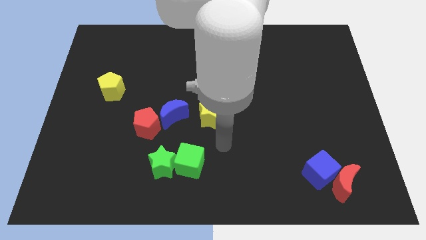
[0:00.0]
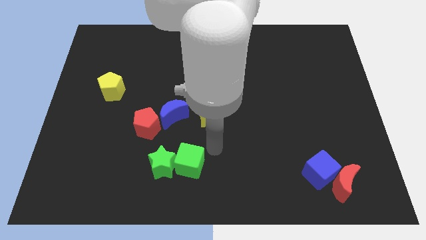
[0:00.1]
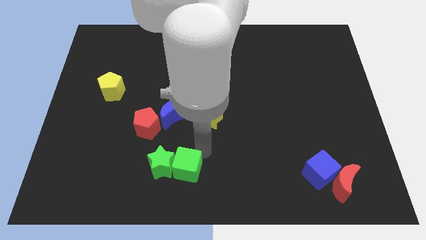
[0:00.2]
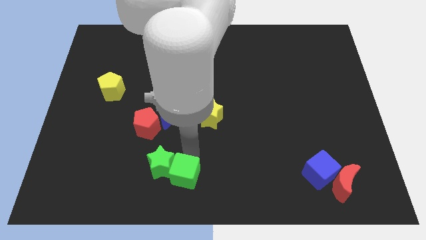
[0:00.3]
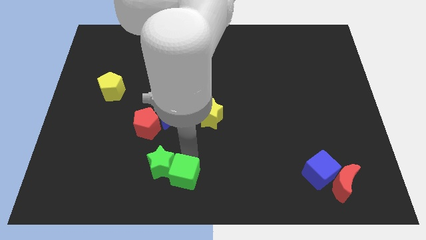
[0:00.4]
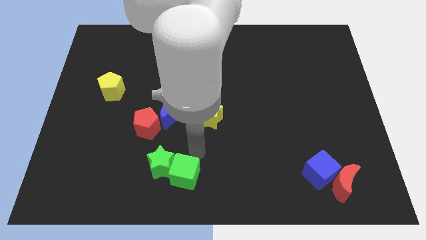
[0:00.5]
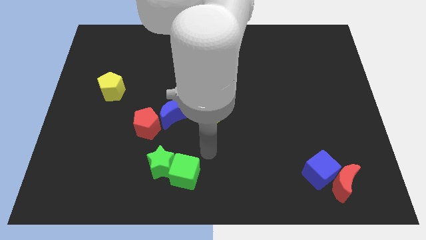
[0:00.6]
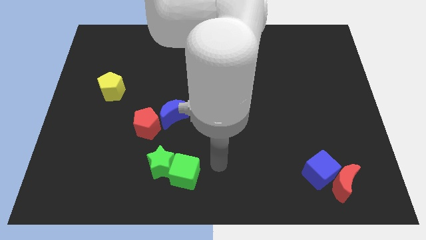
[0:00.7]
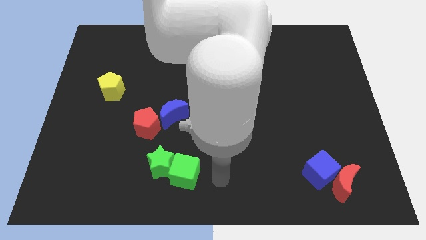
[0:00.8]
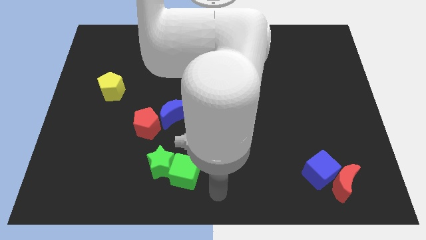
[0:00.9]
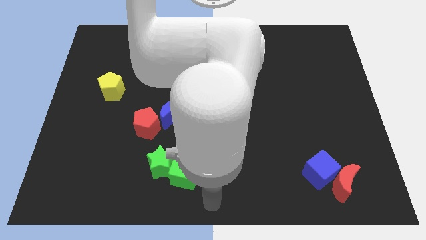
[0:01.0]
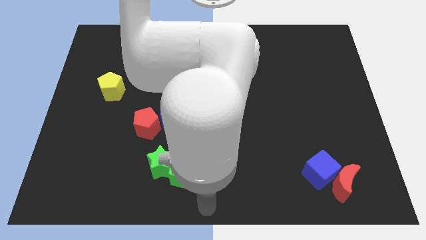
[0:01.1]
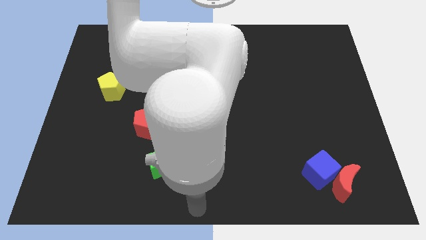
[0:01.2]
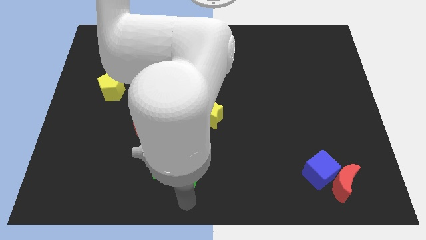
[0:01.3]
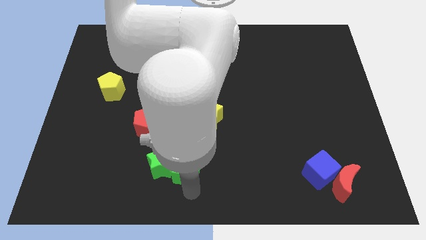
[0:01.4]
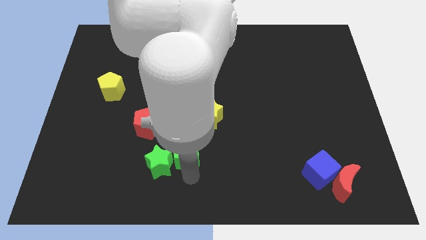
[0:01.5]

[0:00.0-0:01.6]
point your arm below green cube

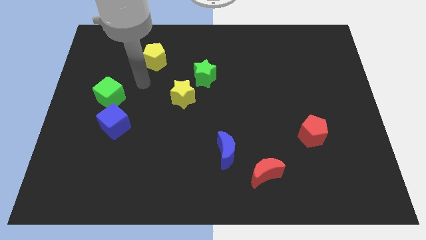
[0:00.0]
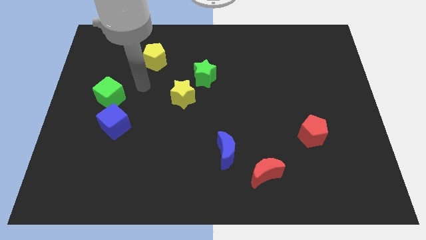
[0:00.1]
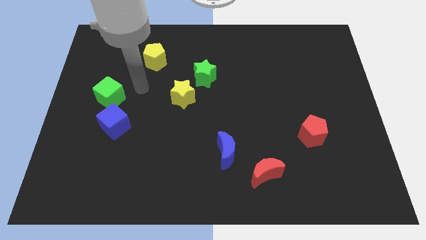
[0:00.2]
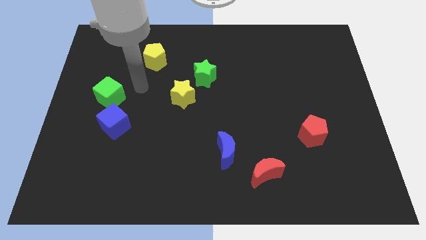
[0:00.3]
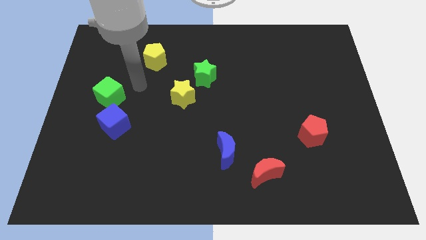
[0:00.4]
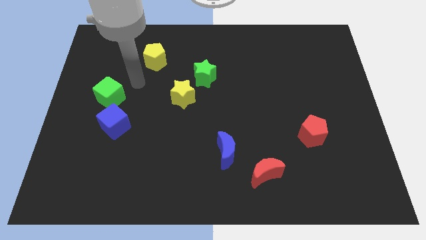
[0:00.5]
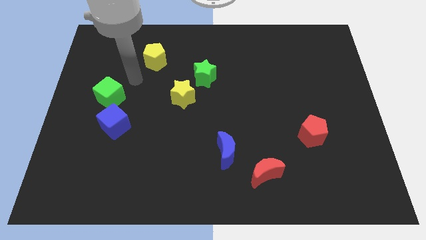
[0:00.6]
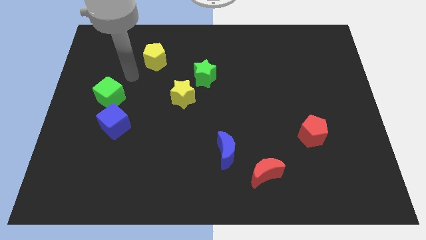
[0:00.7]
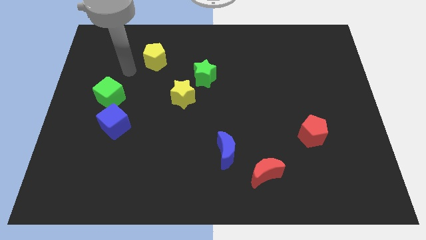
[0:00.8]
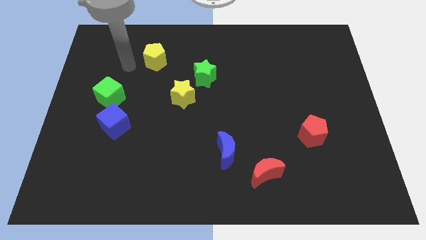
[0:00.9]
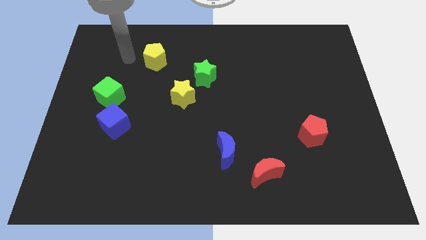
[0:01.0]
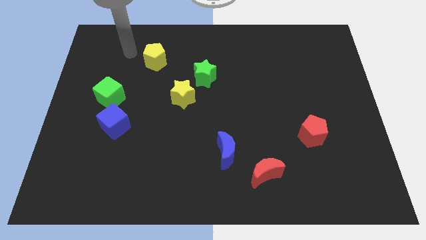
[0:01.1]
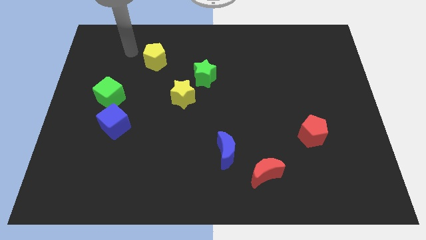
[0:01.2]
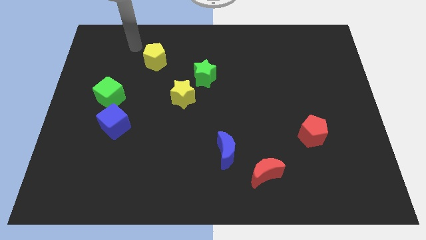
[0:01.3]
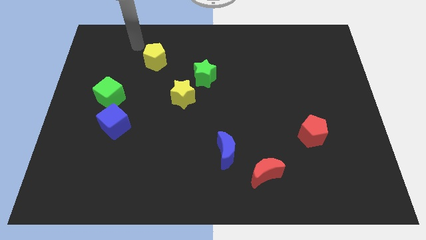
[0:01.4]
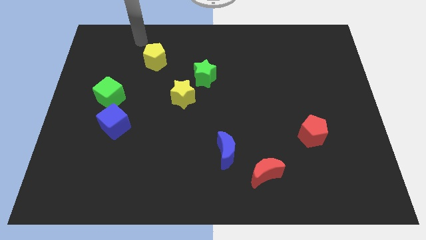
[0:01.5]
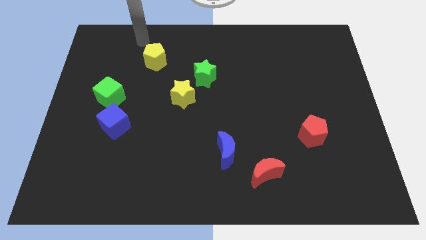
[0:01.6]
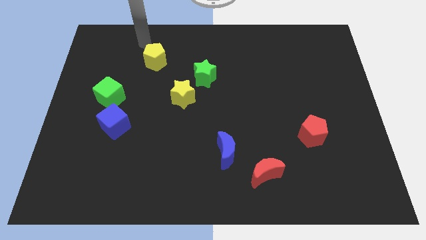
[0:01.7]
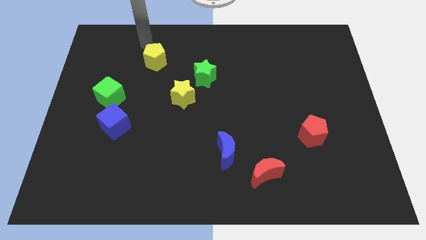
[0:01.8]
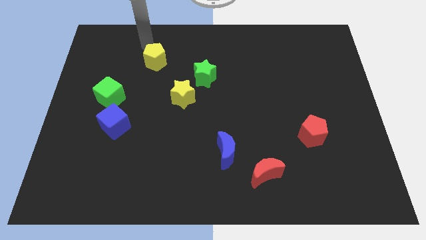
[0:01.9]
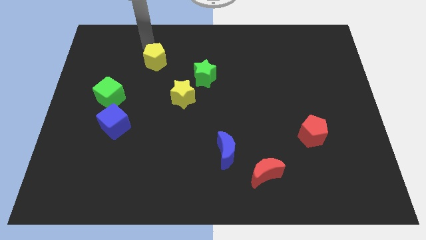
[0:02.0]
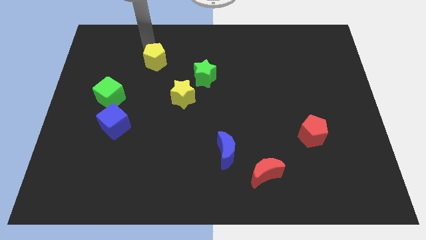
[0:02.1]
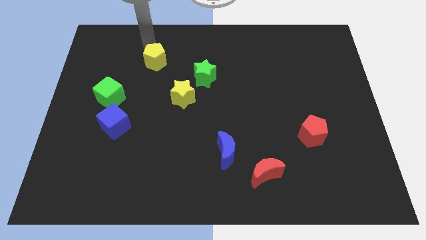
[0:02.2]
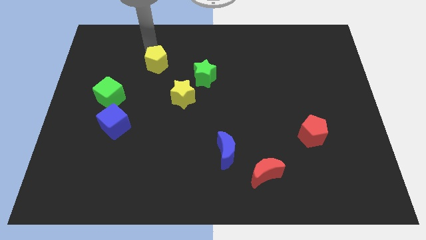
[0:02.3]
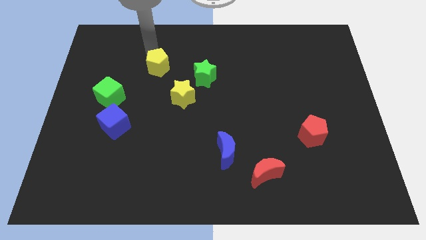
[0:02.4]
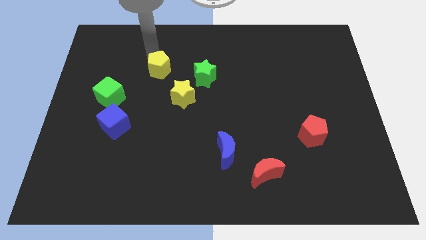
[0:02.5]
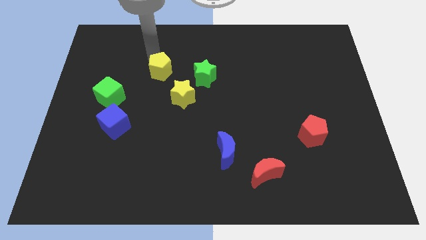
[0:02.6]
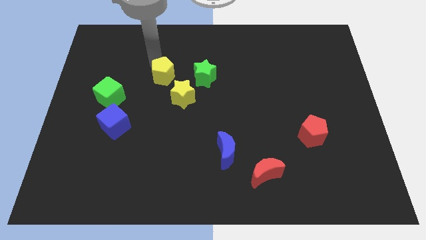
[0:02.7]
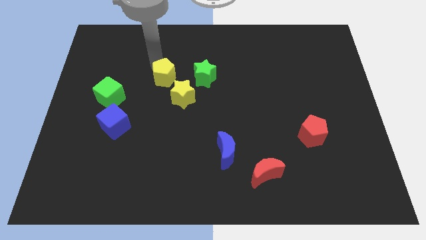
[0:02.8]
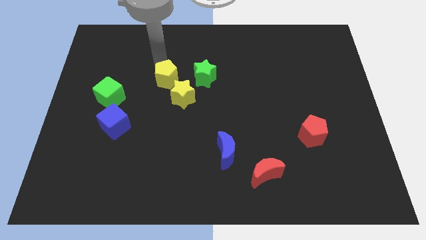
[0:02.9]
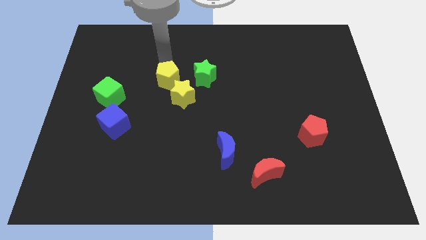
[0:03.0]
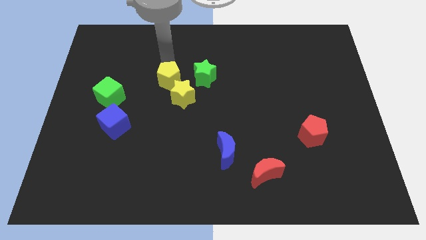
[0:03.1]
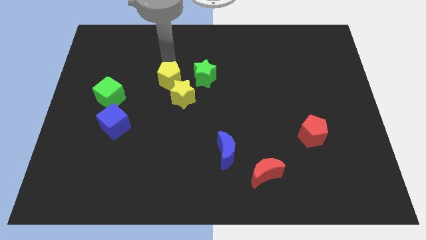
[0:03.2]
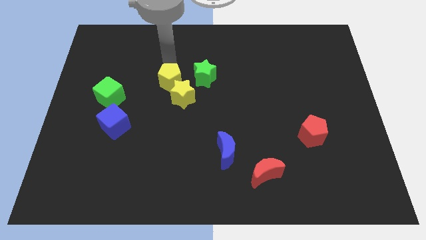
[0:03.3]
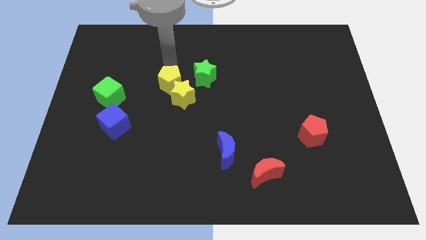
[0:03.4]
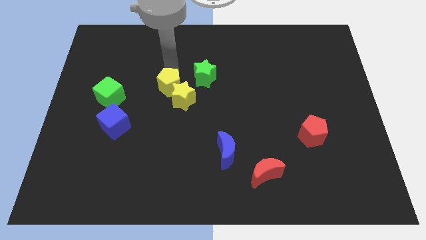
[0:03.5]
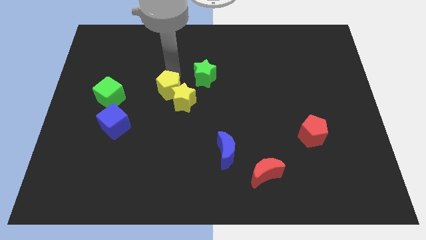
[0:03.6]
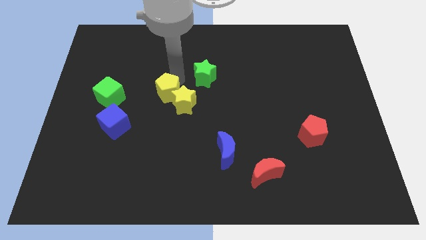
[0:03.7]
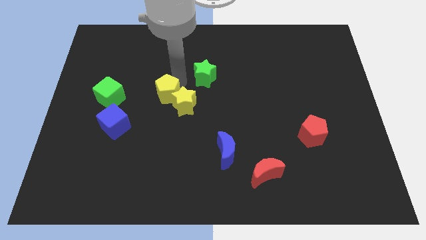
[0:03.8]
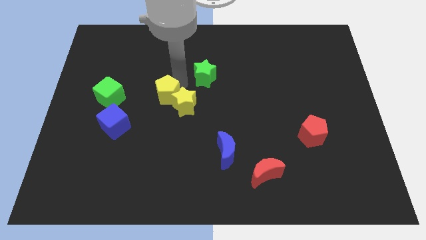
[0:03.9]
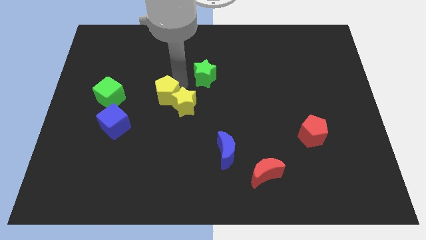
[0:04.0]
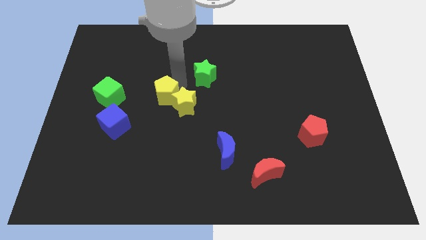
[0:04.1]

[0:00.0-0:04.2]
push the yellow pentagon to the left of the yellow star

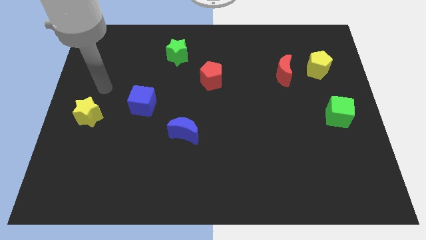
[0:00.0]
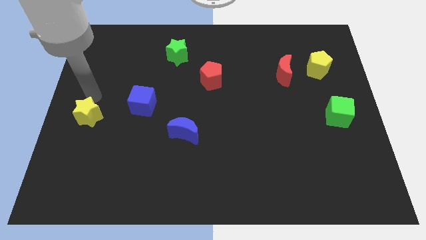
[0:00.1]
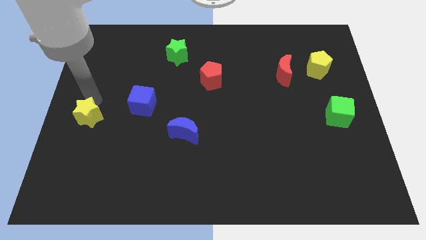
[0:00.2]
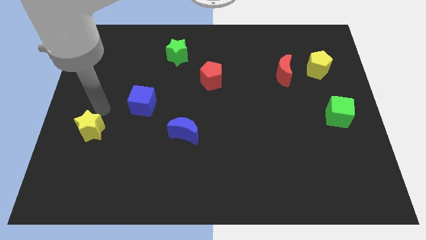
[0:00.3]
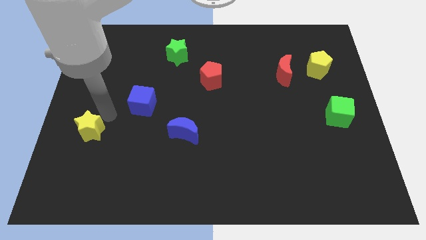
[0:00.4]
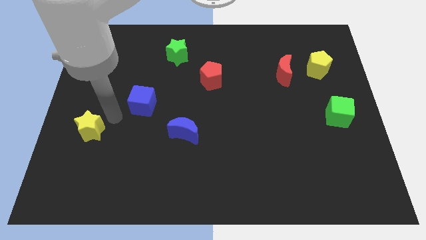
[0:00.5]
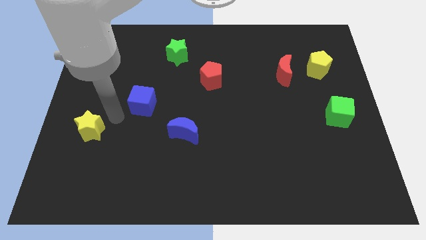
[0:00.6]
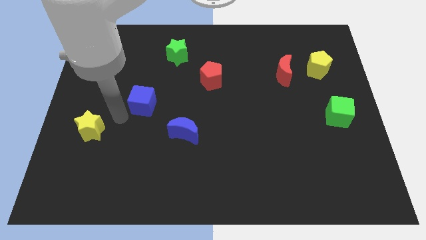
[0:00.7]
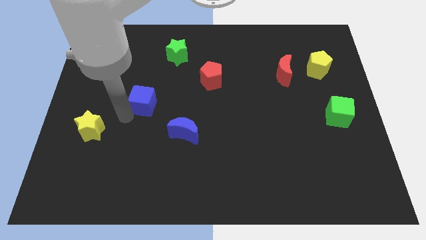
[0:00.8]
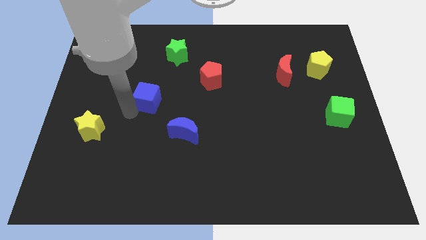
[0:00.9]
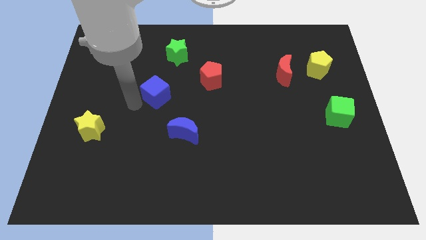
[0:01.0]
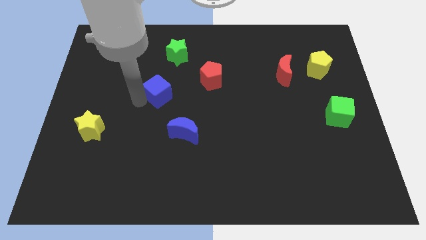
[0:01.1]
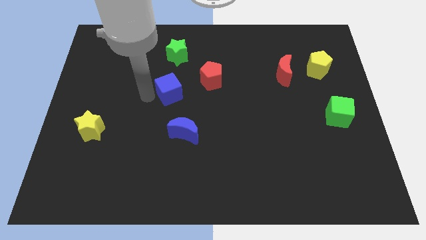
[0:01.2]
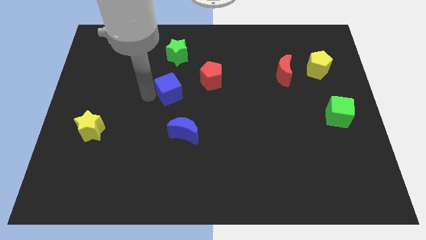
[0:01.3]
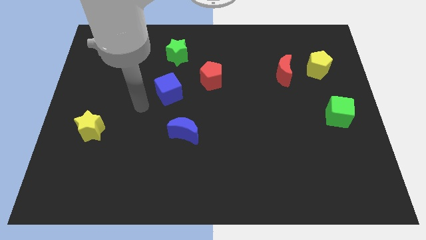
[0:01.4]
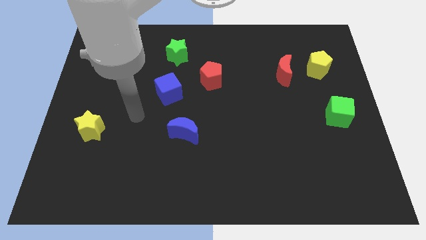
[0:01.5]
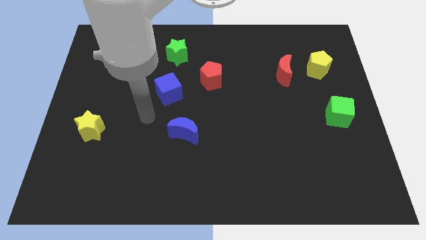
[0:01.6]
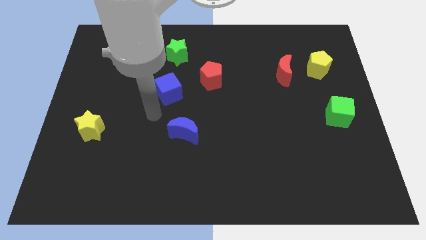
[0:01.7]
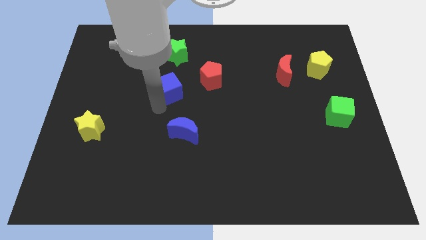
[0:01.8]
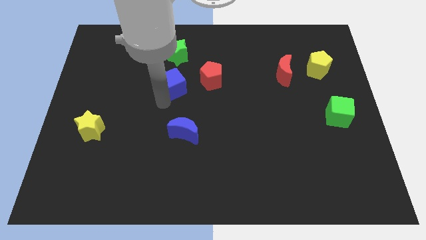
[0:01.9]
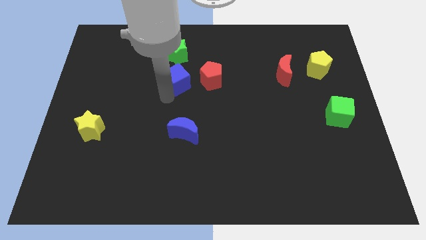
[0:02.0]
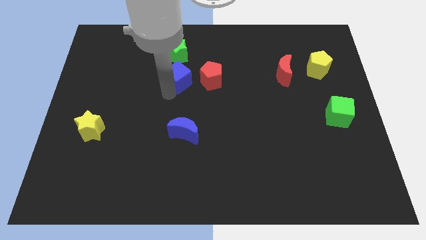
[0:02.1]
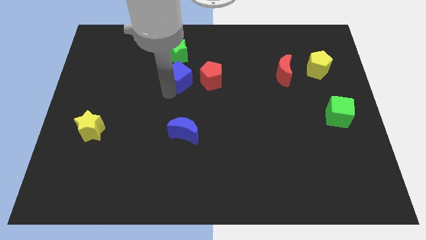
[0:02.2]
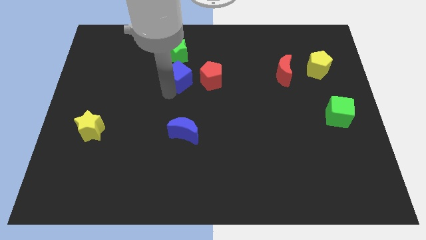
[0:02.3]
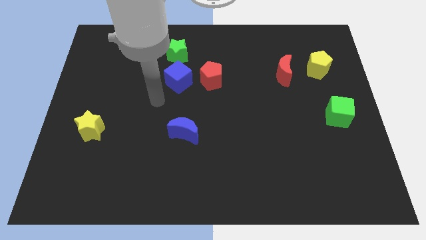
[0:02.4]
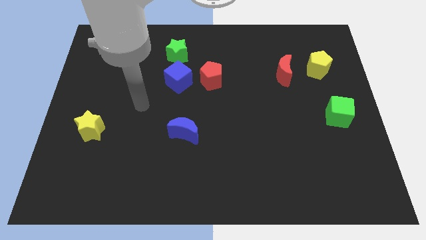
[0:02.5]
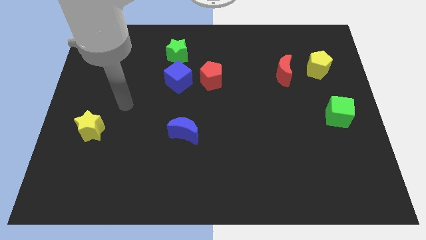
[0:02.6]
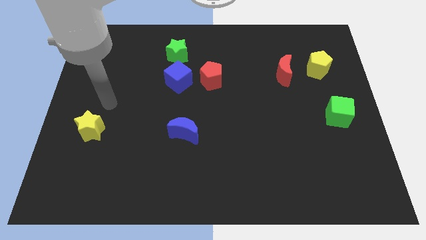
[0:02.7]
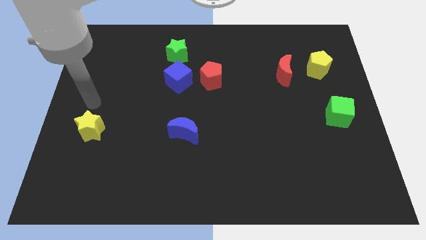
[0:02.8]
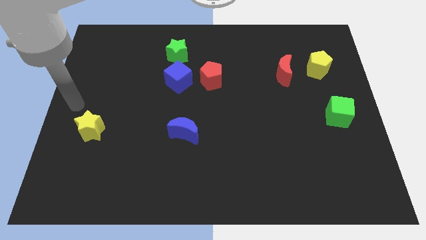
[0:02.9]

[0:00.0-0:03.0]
move the blue cube to the left of the red pentagon
